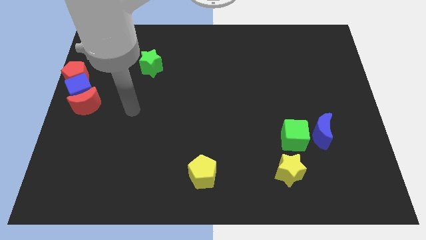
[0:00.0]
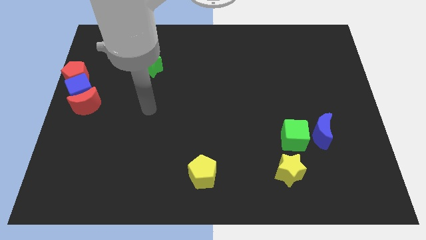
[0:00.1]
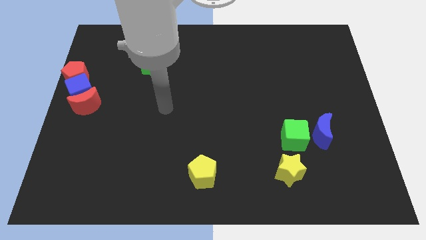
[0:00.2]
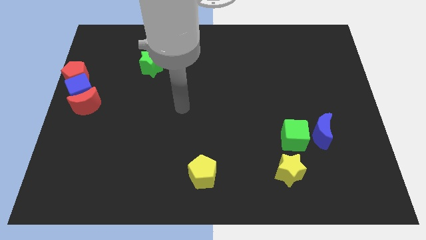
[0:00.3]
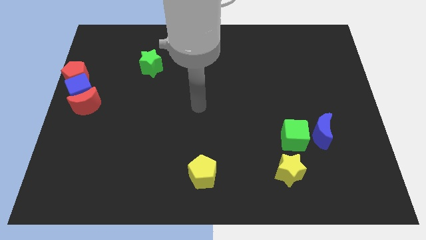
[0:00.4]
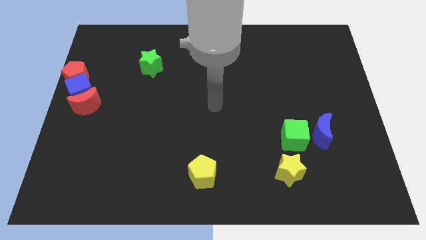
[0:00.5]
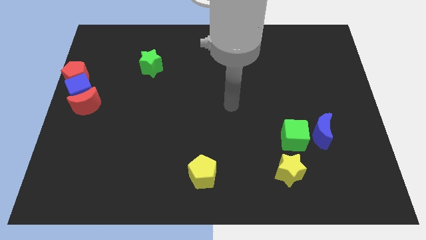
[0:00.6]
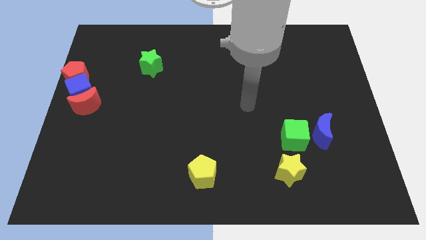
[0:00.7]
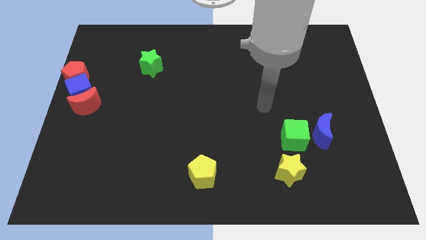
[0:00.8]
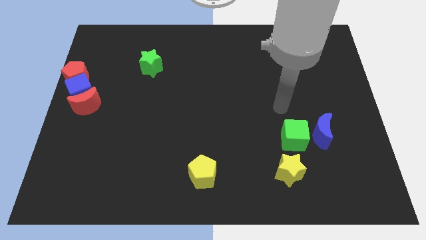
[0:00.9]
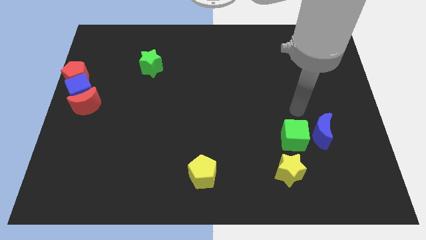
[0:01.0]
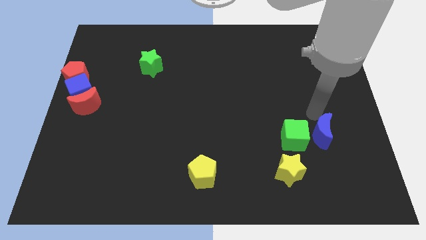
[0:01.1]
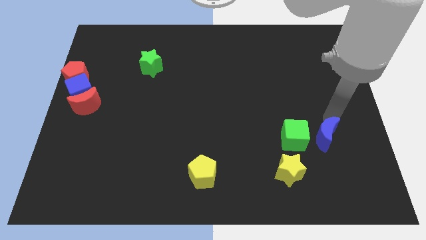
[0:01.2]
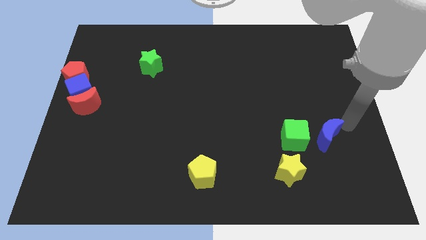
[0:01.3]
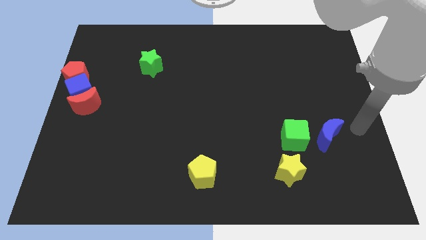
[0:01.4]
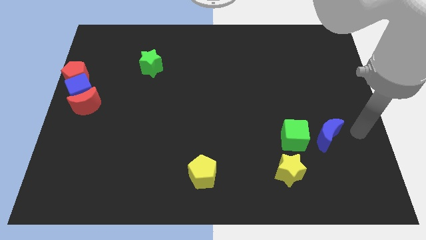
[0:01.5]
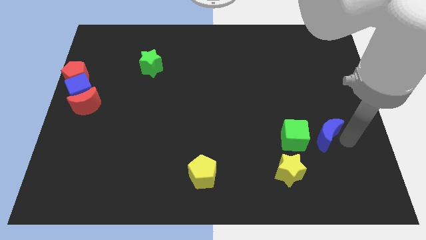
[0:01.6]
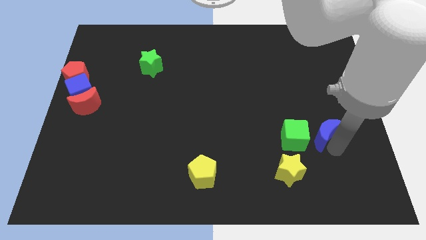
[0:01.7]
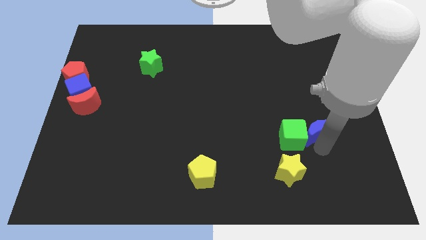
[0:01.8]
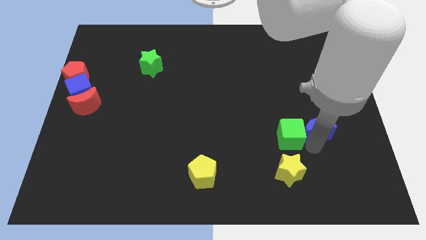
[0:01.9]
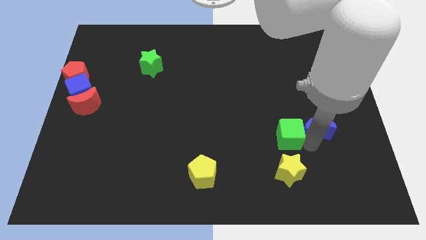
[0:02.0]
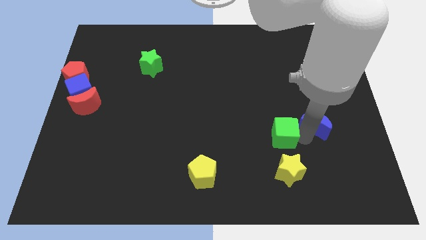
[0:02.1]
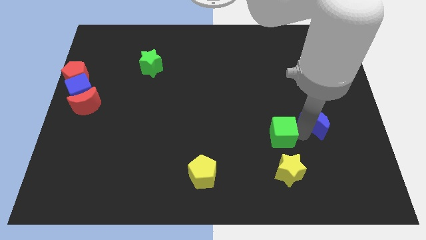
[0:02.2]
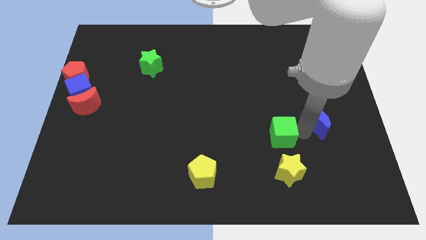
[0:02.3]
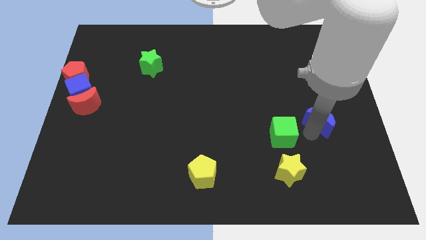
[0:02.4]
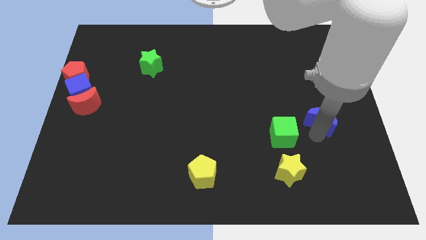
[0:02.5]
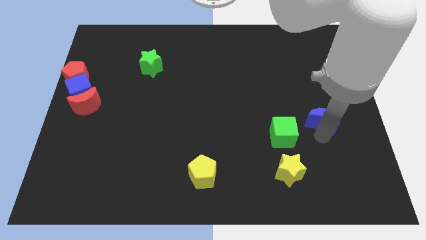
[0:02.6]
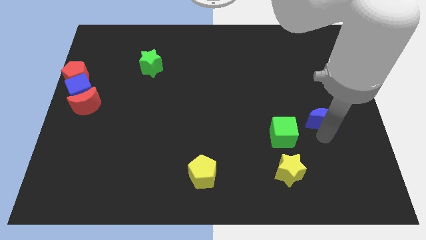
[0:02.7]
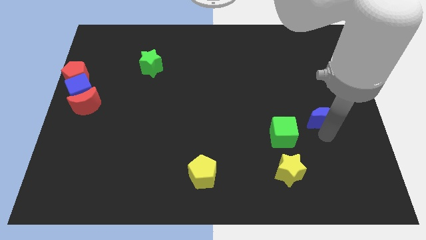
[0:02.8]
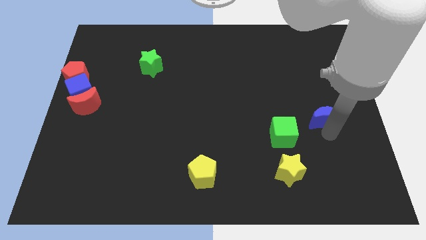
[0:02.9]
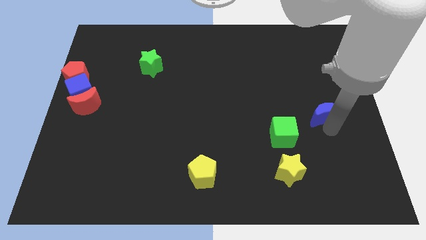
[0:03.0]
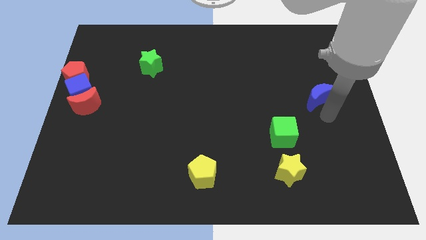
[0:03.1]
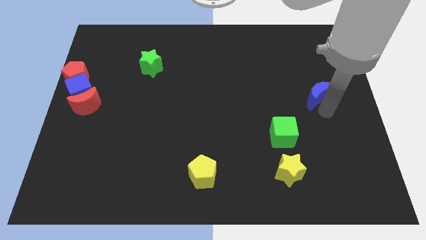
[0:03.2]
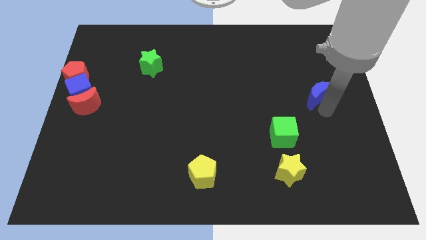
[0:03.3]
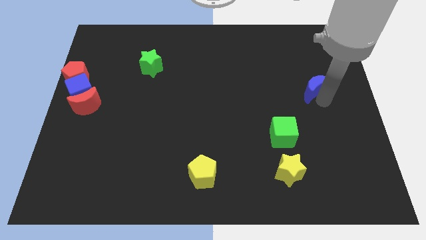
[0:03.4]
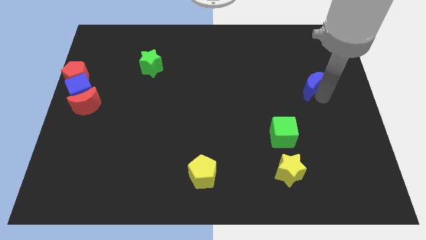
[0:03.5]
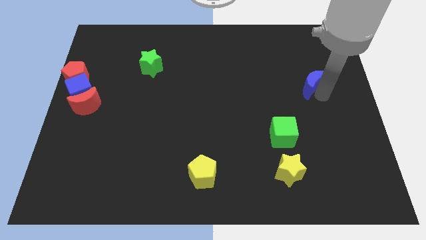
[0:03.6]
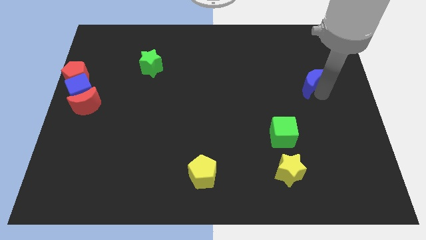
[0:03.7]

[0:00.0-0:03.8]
separate the blue moon from green cube

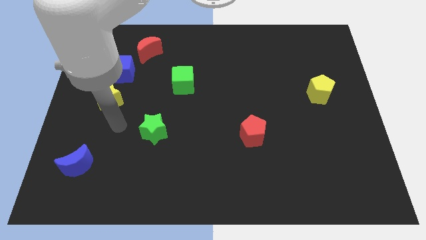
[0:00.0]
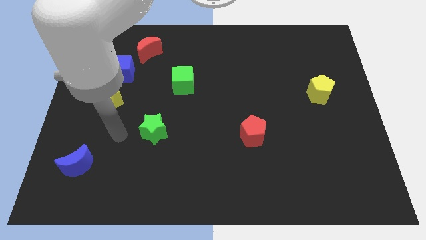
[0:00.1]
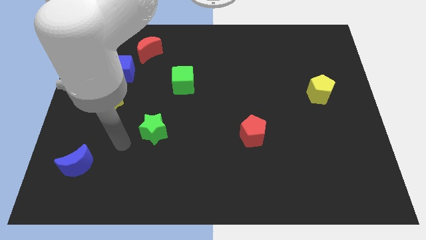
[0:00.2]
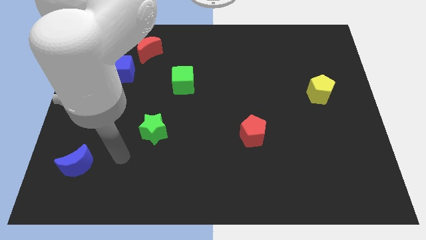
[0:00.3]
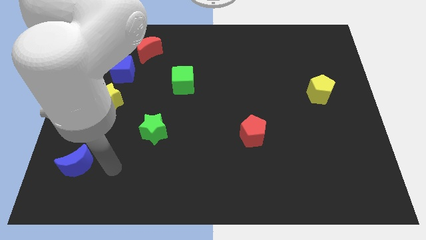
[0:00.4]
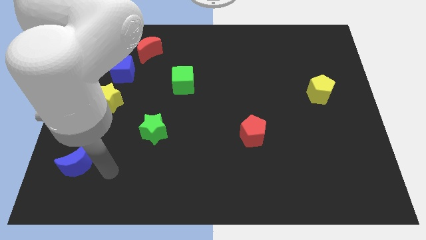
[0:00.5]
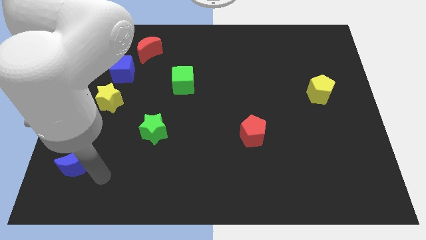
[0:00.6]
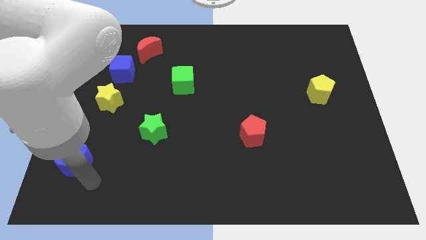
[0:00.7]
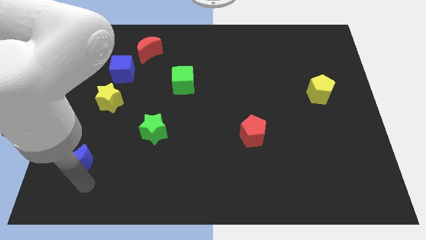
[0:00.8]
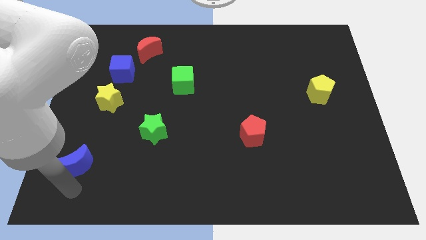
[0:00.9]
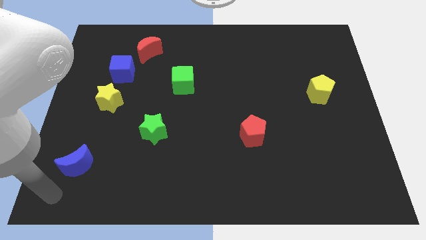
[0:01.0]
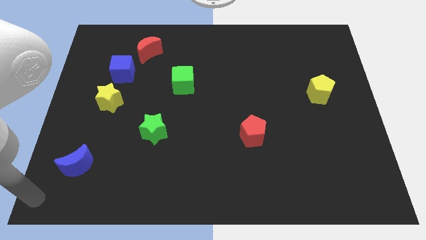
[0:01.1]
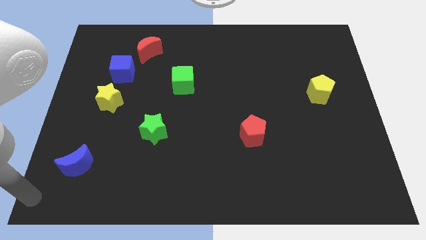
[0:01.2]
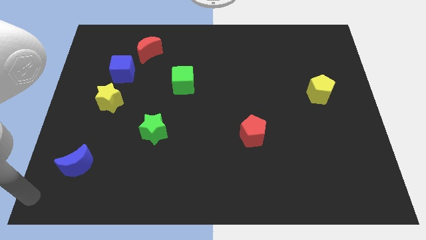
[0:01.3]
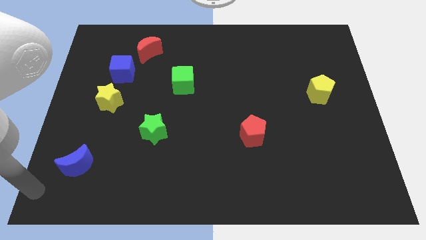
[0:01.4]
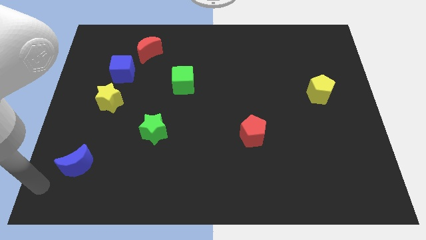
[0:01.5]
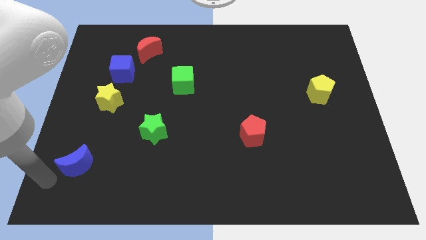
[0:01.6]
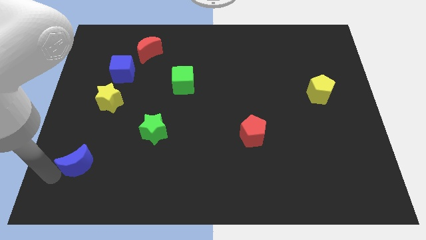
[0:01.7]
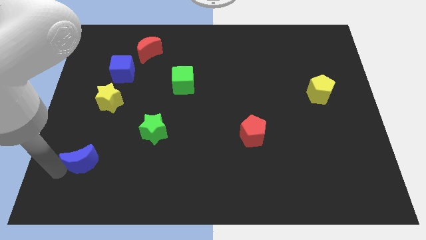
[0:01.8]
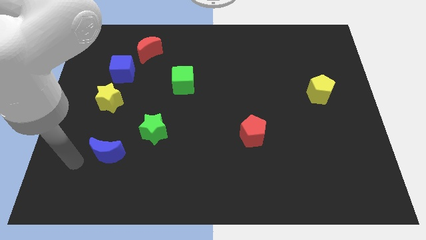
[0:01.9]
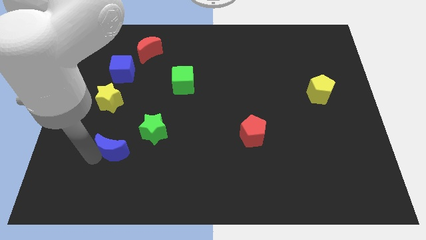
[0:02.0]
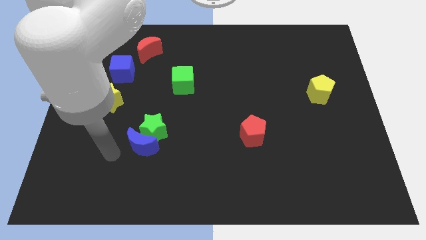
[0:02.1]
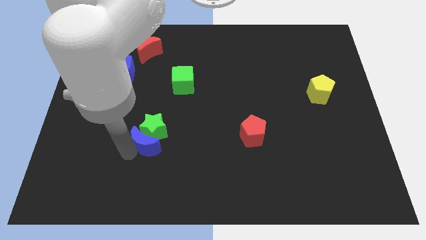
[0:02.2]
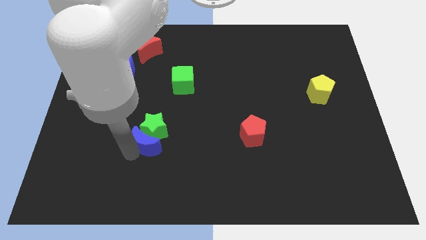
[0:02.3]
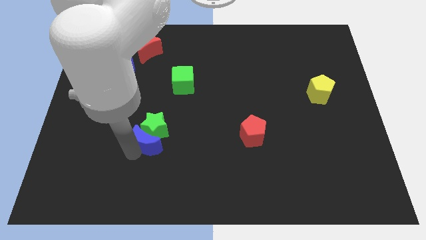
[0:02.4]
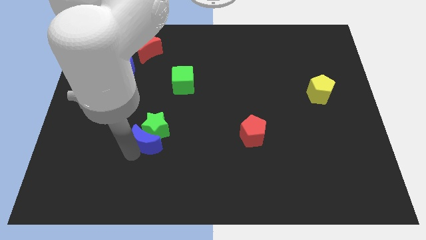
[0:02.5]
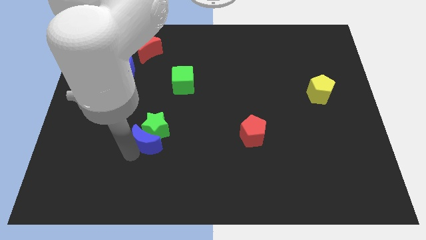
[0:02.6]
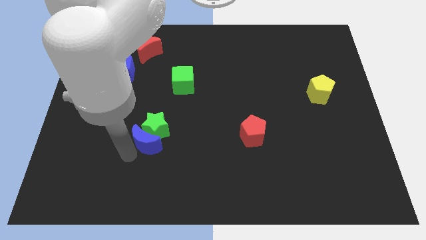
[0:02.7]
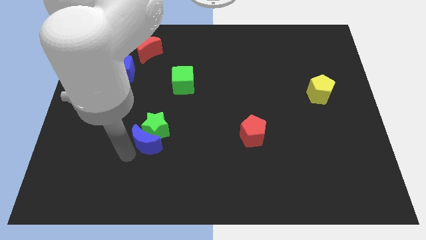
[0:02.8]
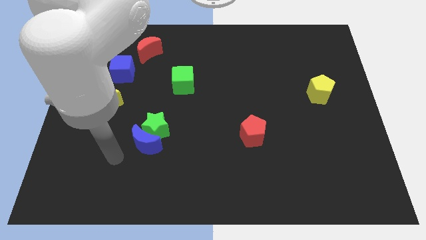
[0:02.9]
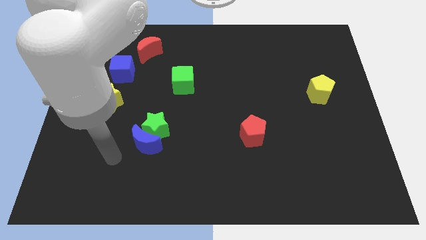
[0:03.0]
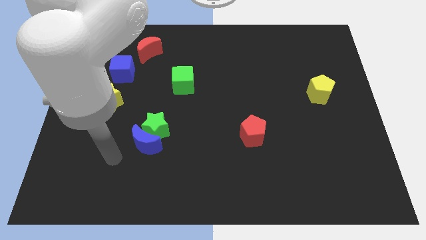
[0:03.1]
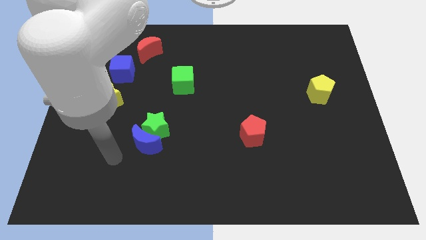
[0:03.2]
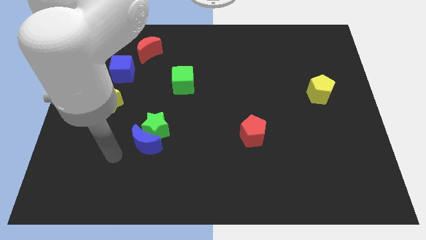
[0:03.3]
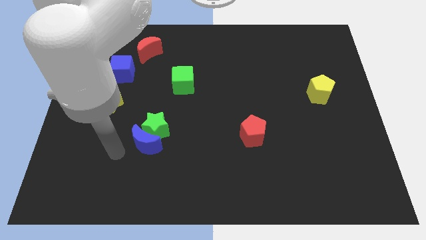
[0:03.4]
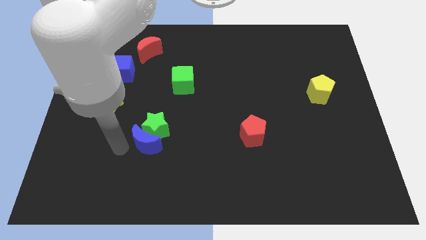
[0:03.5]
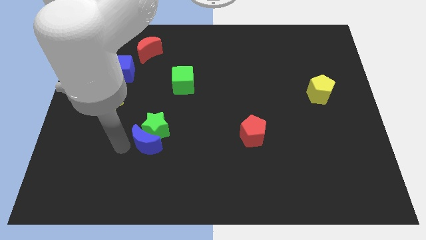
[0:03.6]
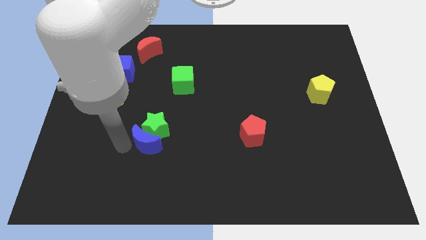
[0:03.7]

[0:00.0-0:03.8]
move the blue crescent to the bottom left of the green star

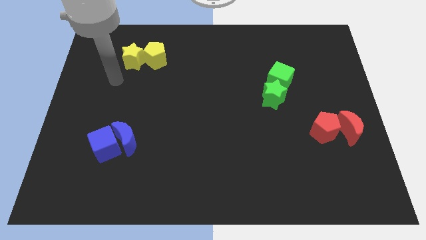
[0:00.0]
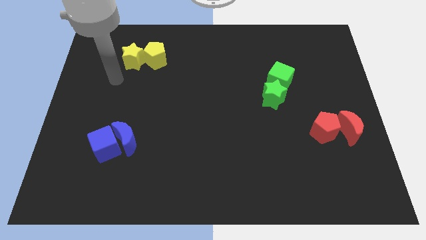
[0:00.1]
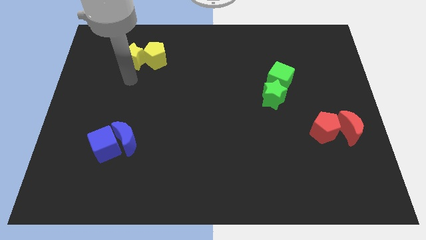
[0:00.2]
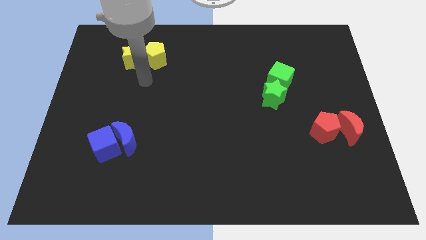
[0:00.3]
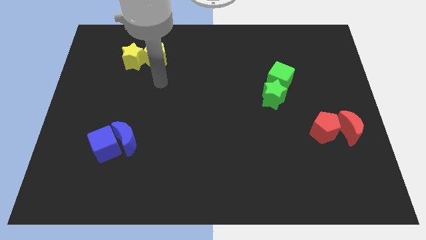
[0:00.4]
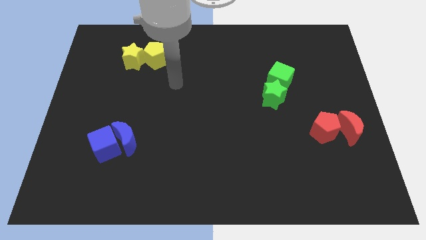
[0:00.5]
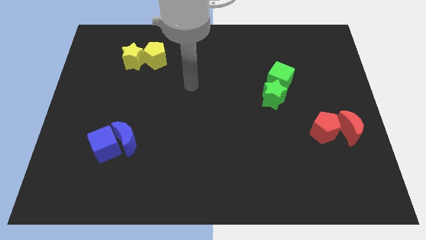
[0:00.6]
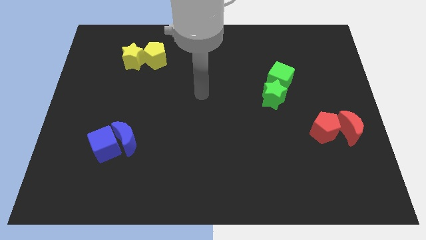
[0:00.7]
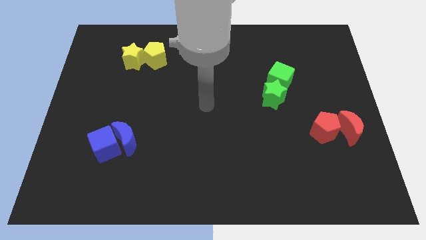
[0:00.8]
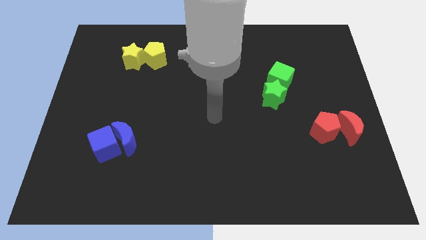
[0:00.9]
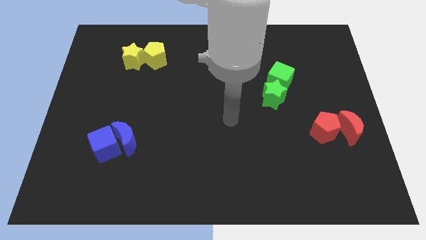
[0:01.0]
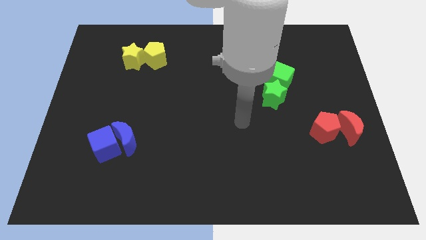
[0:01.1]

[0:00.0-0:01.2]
move your hand away from the yellow star
